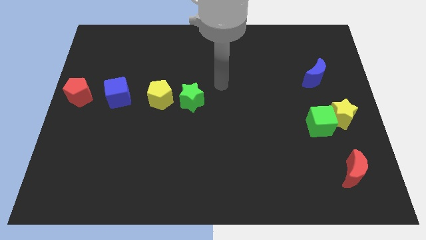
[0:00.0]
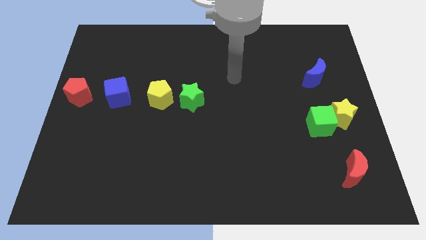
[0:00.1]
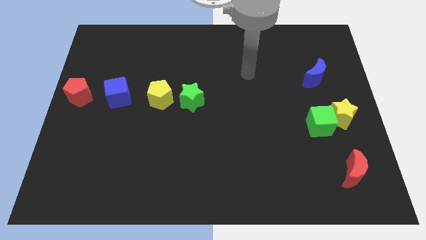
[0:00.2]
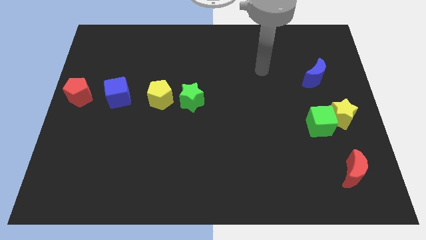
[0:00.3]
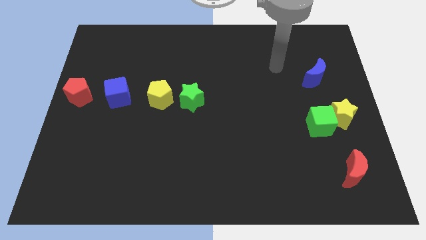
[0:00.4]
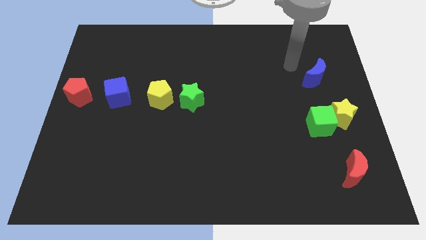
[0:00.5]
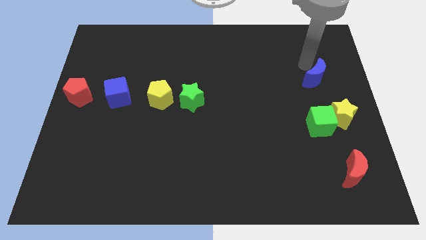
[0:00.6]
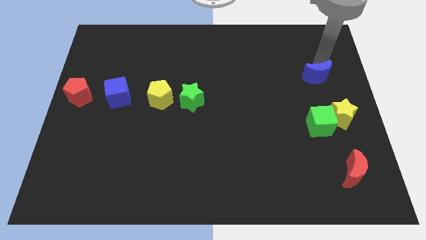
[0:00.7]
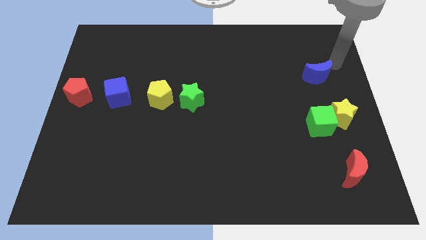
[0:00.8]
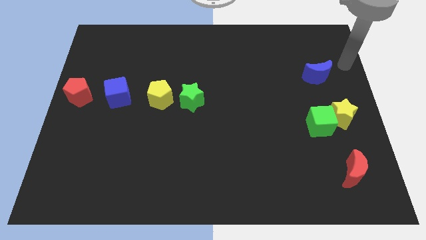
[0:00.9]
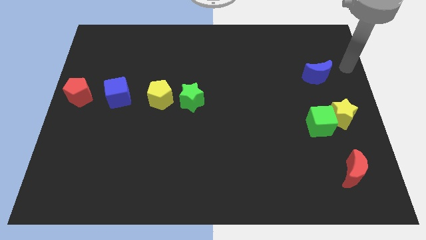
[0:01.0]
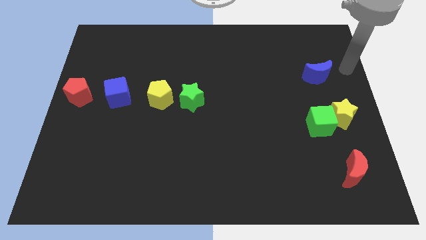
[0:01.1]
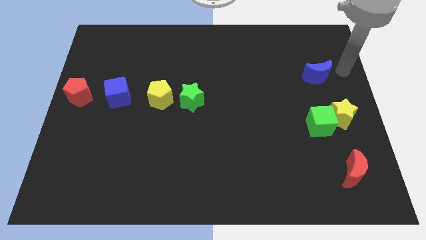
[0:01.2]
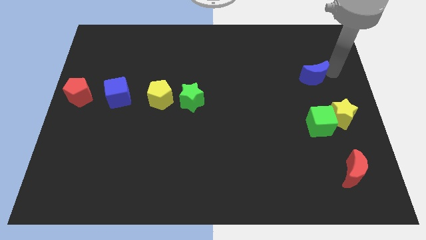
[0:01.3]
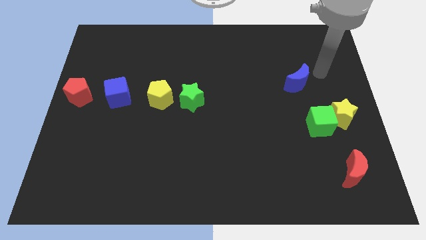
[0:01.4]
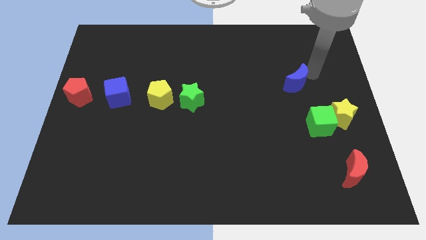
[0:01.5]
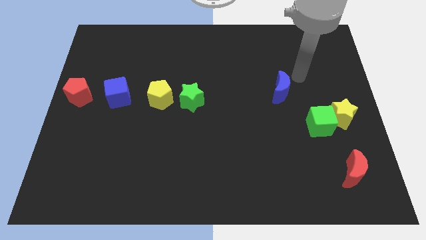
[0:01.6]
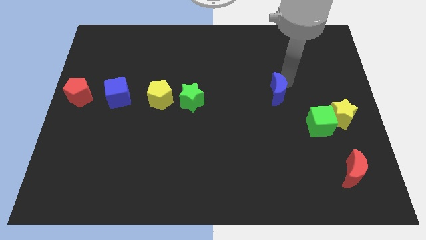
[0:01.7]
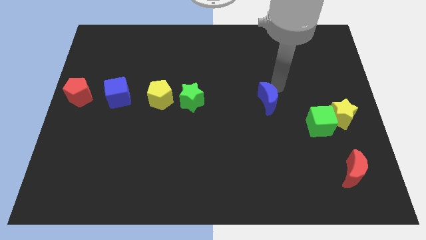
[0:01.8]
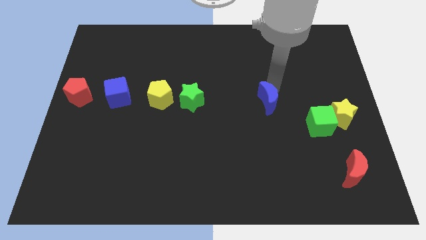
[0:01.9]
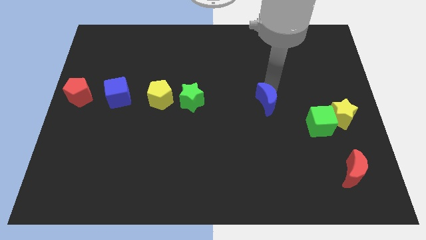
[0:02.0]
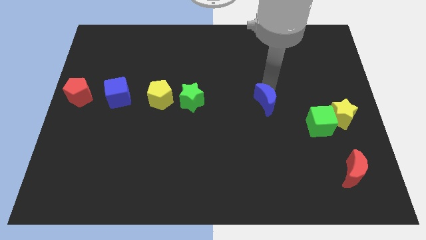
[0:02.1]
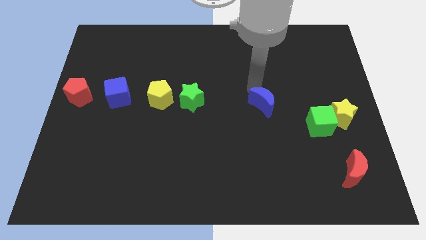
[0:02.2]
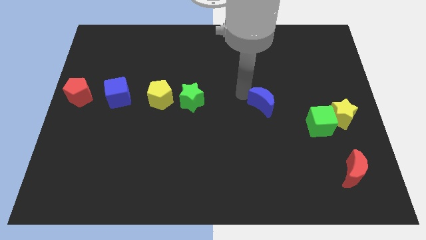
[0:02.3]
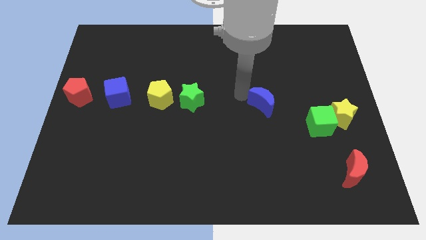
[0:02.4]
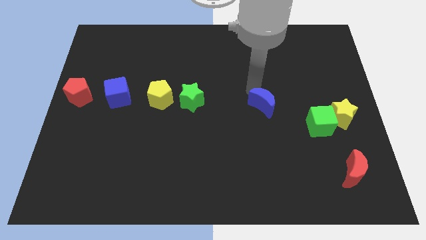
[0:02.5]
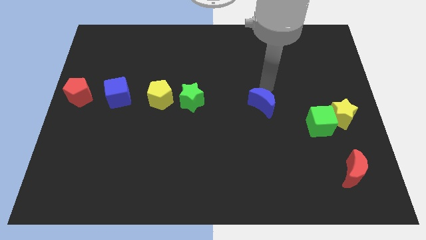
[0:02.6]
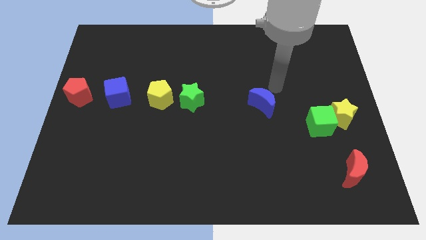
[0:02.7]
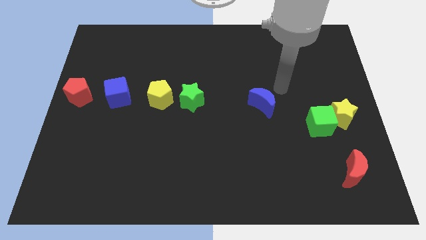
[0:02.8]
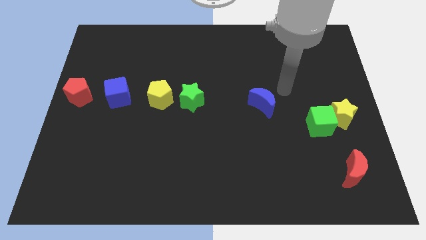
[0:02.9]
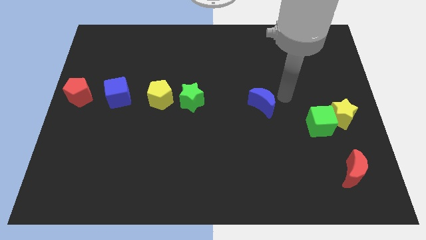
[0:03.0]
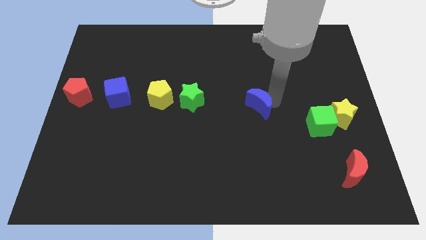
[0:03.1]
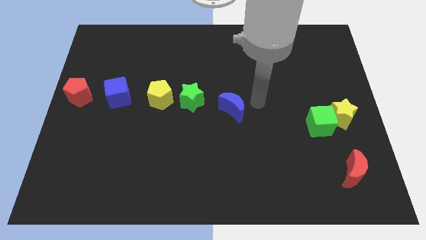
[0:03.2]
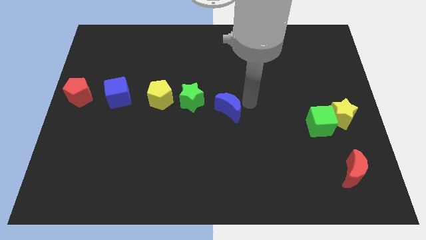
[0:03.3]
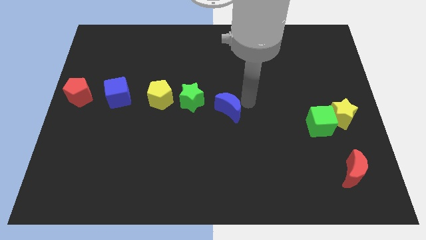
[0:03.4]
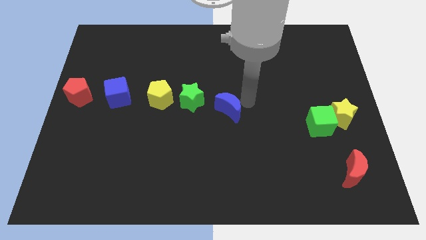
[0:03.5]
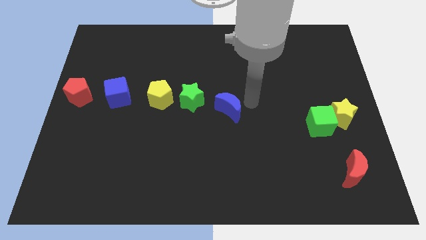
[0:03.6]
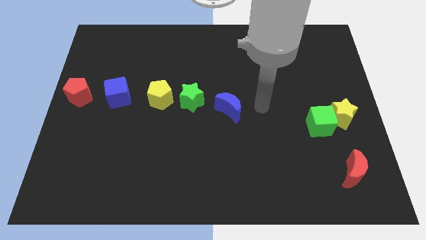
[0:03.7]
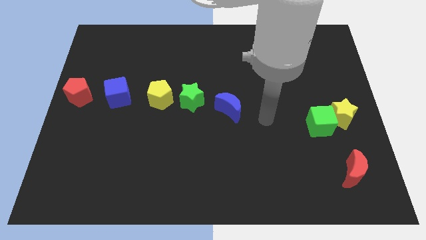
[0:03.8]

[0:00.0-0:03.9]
place blue moon to the bottom right of the green star

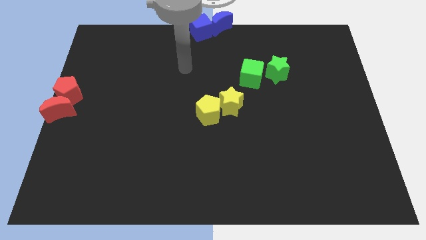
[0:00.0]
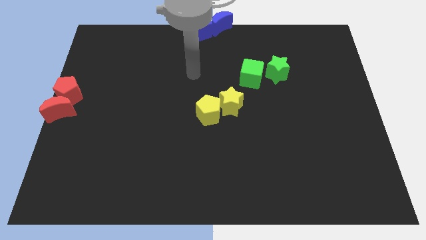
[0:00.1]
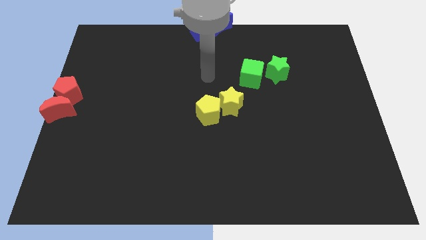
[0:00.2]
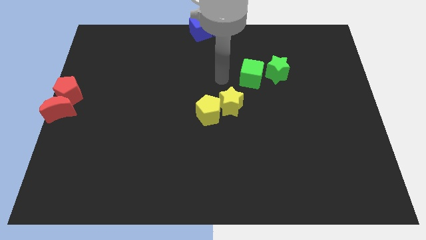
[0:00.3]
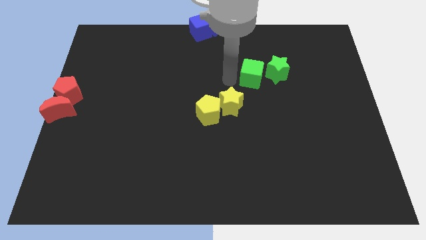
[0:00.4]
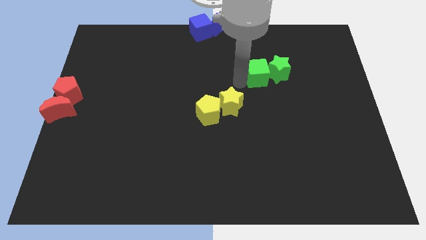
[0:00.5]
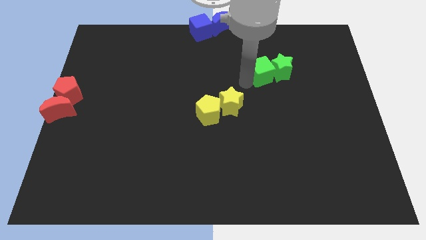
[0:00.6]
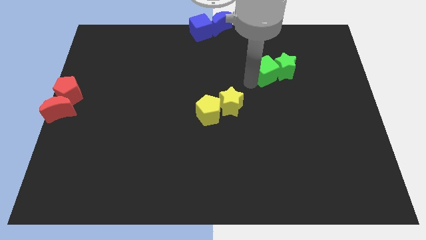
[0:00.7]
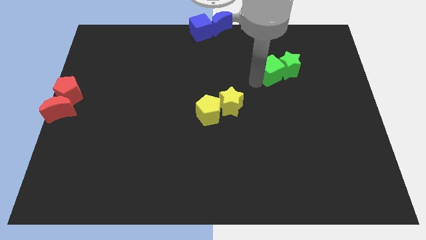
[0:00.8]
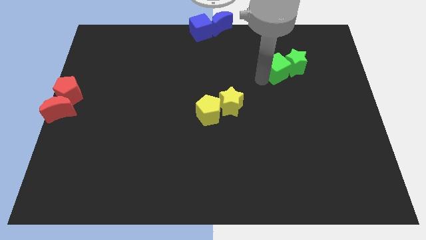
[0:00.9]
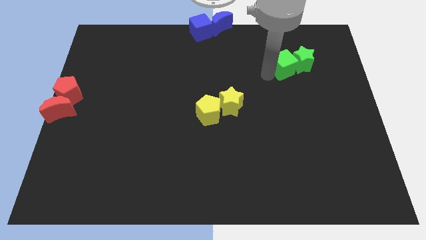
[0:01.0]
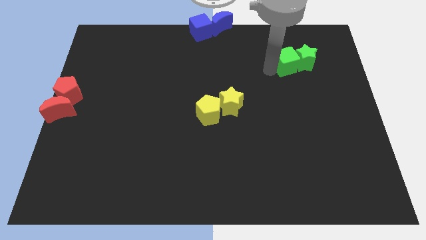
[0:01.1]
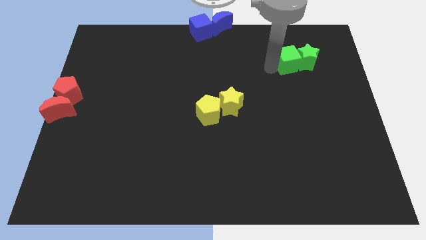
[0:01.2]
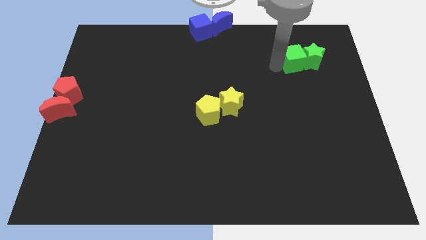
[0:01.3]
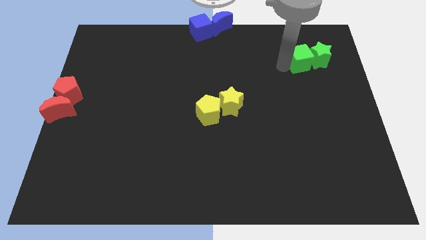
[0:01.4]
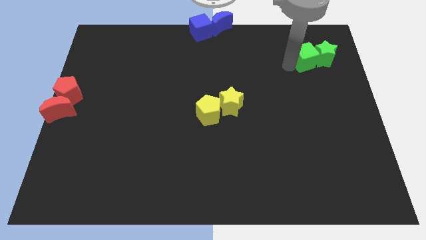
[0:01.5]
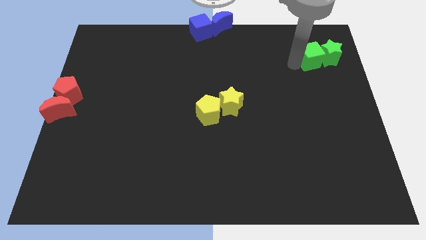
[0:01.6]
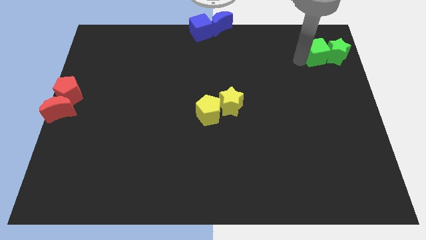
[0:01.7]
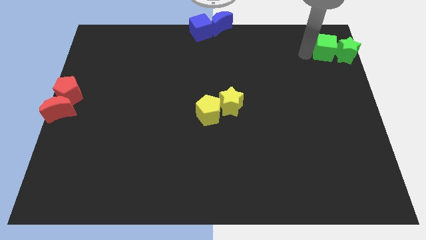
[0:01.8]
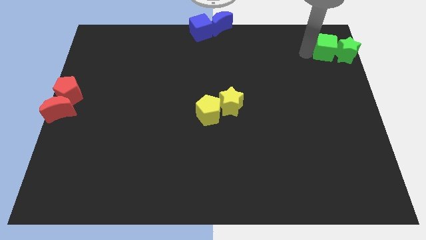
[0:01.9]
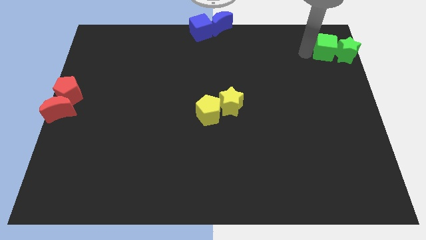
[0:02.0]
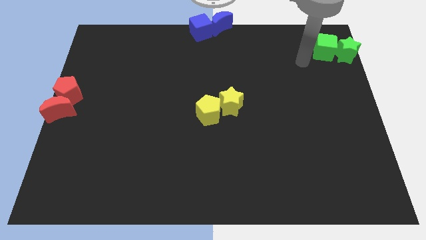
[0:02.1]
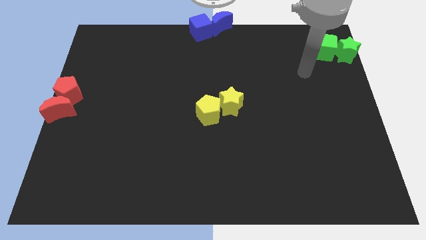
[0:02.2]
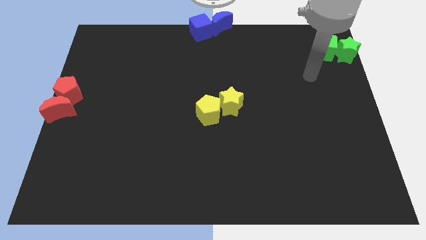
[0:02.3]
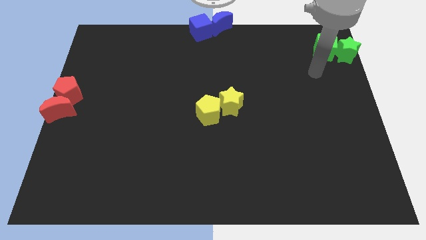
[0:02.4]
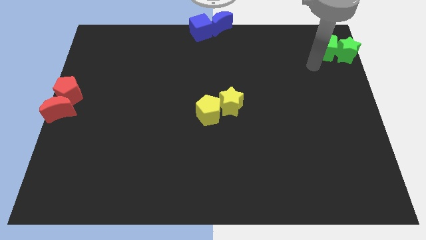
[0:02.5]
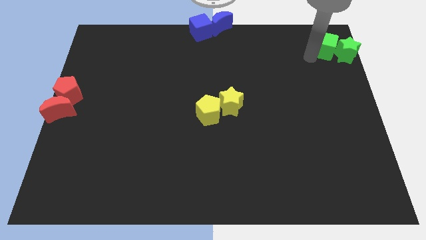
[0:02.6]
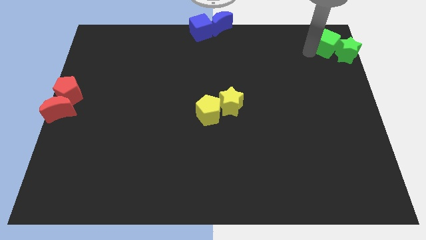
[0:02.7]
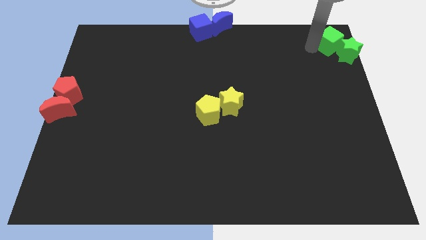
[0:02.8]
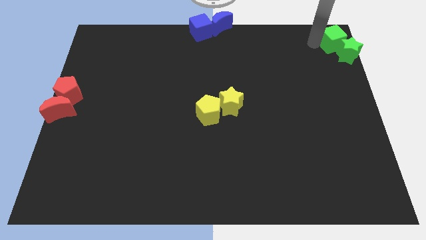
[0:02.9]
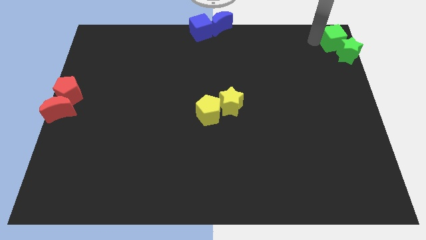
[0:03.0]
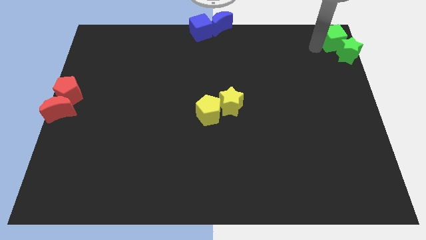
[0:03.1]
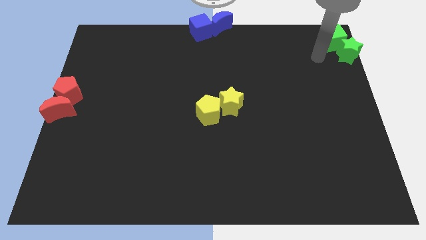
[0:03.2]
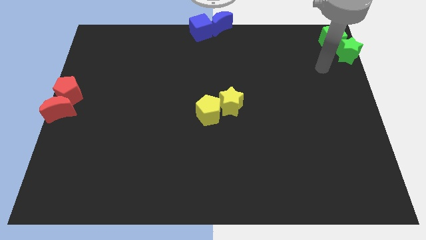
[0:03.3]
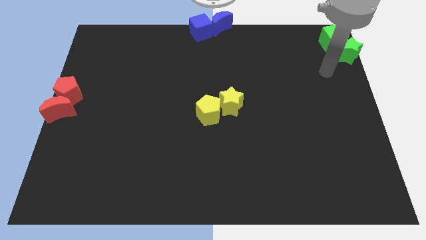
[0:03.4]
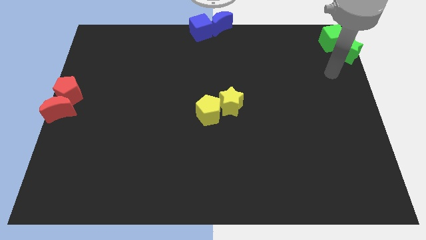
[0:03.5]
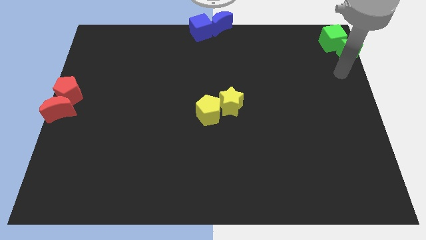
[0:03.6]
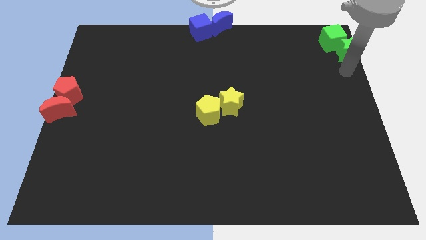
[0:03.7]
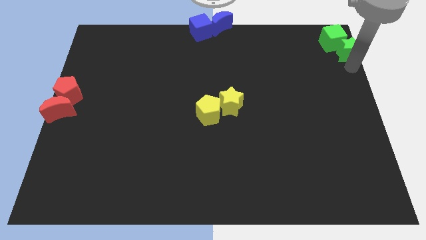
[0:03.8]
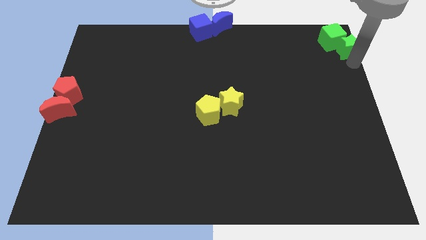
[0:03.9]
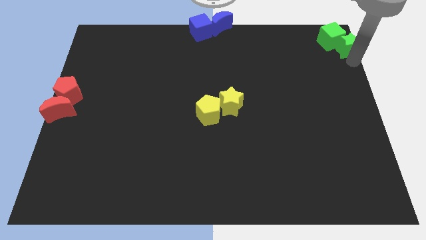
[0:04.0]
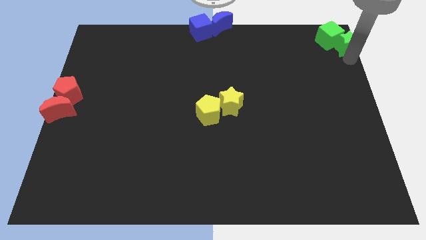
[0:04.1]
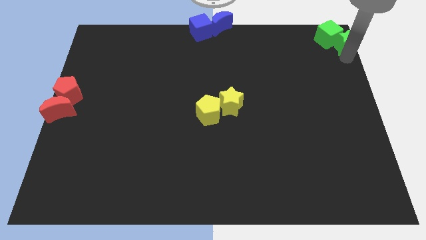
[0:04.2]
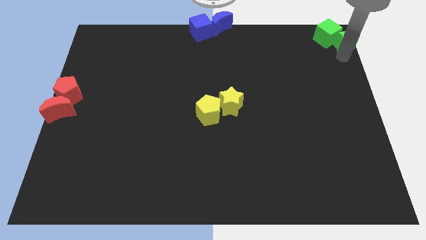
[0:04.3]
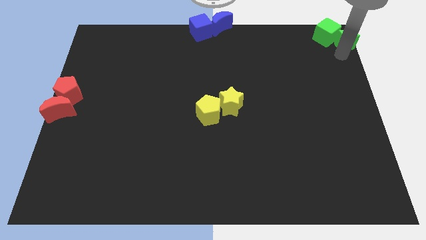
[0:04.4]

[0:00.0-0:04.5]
push the group of green blocks to the top right corner

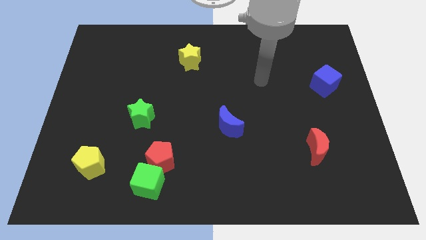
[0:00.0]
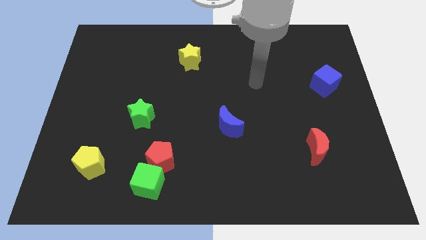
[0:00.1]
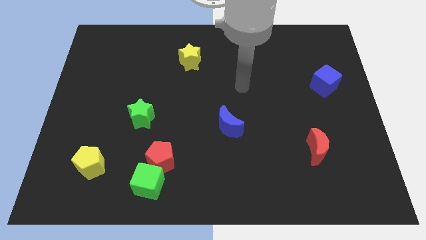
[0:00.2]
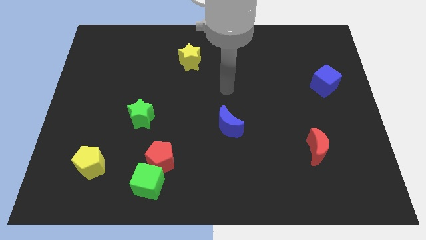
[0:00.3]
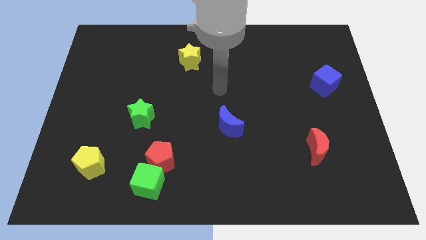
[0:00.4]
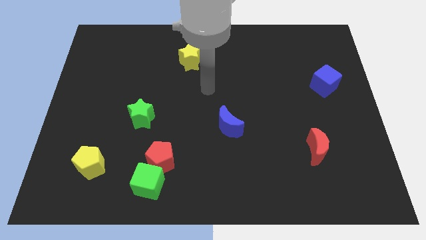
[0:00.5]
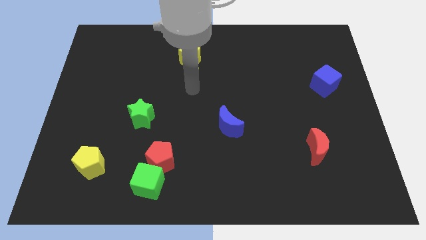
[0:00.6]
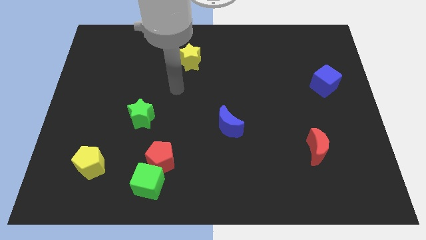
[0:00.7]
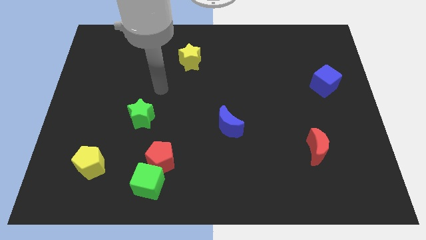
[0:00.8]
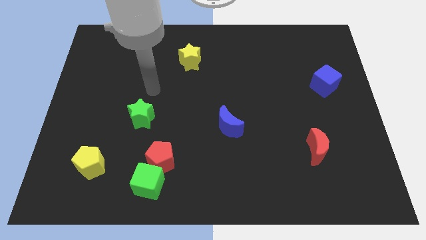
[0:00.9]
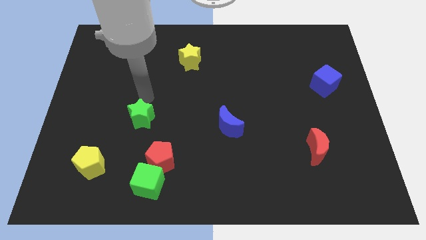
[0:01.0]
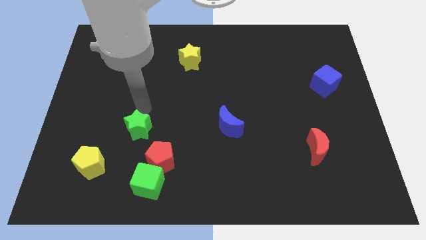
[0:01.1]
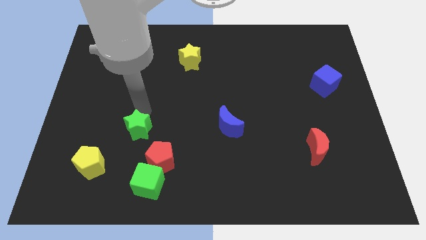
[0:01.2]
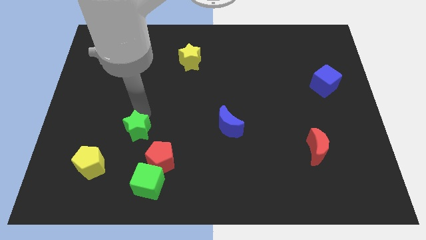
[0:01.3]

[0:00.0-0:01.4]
move your arm into the green star
